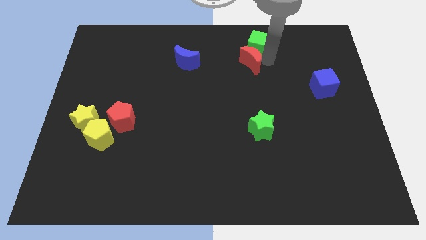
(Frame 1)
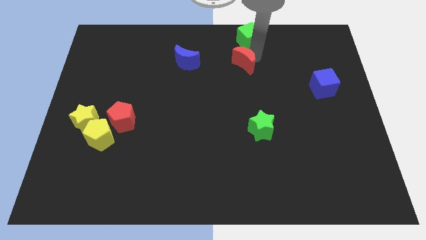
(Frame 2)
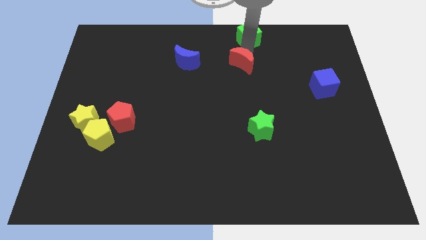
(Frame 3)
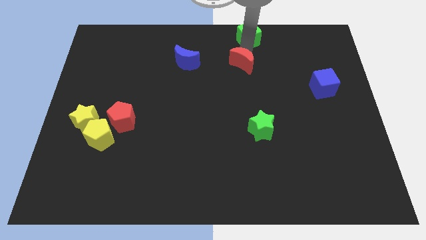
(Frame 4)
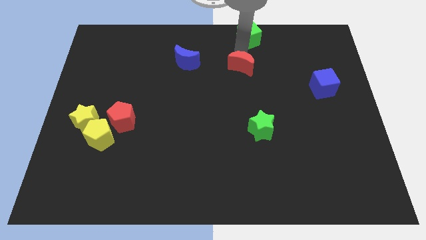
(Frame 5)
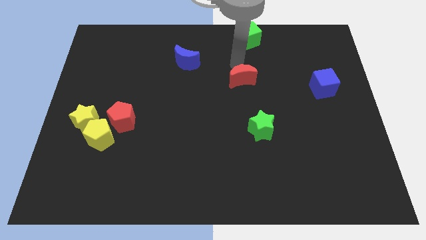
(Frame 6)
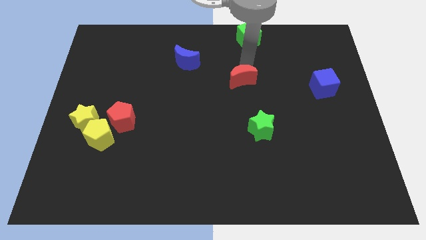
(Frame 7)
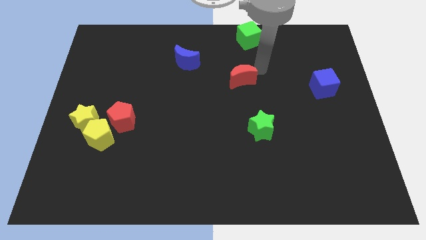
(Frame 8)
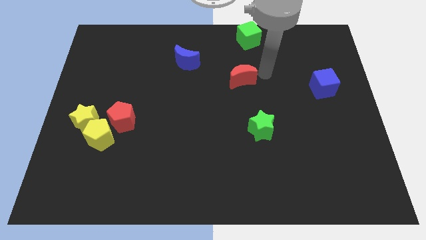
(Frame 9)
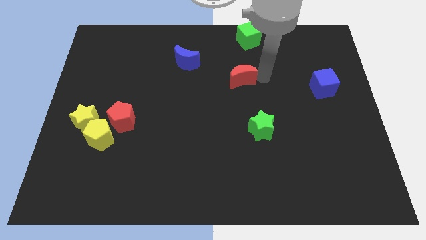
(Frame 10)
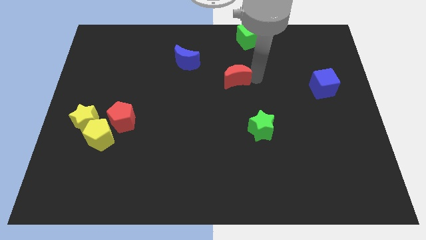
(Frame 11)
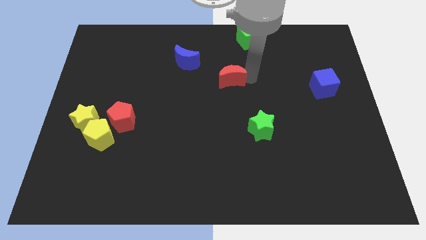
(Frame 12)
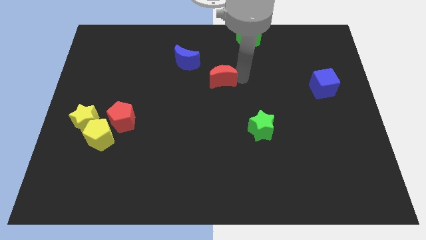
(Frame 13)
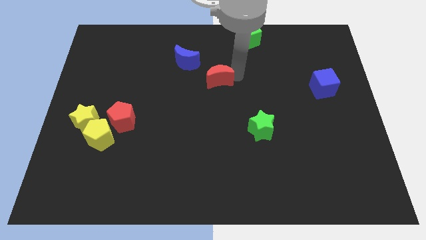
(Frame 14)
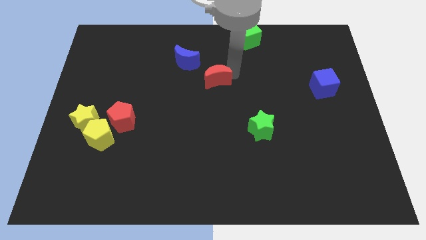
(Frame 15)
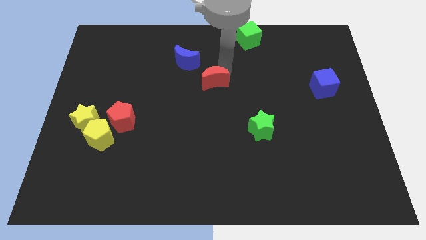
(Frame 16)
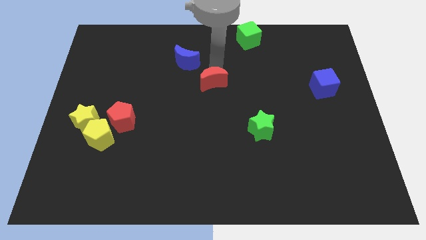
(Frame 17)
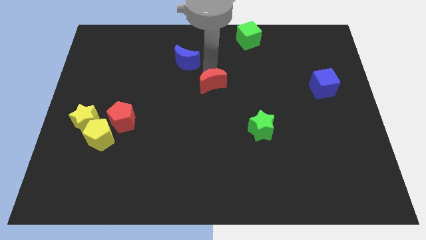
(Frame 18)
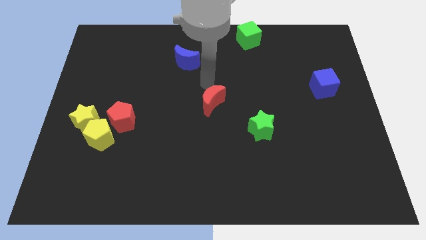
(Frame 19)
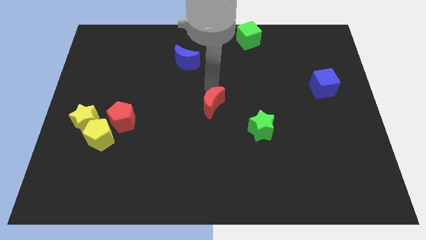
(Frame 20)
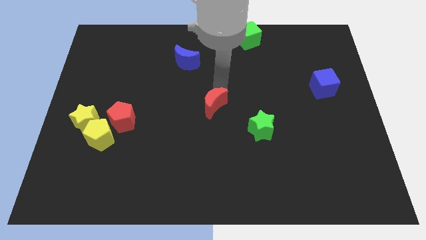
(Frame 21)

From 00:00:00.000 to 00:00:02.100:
push the red moon away from the green cube

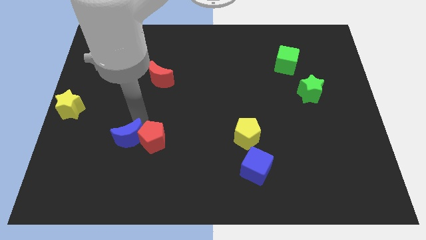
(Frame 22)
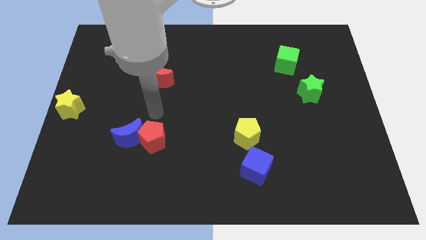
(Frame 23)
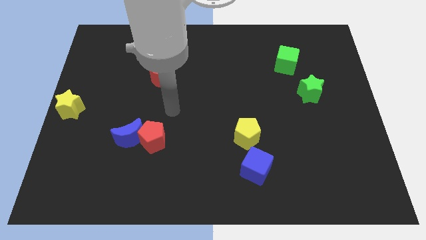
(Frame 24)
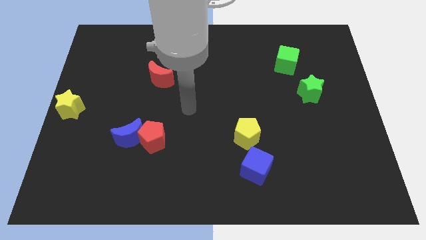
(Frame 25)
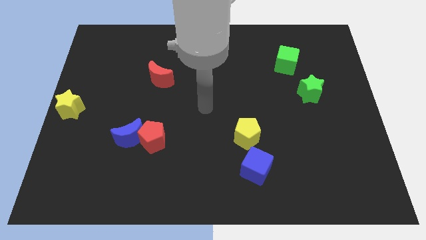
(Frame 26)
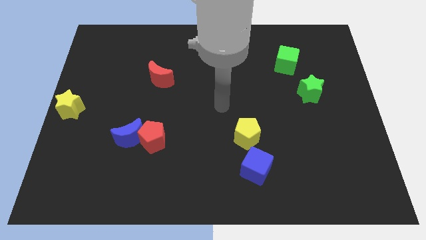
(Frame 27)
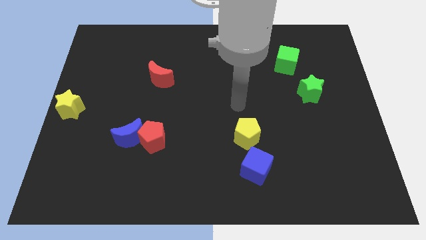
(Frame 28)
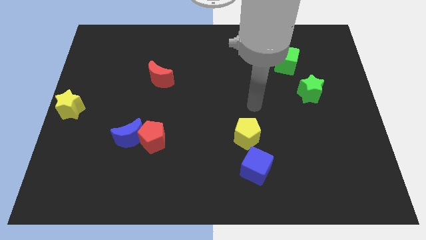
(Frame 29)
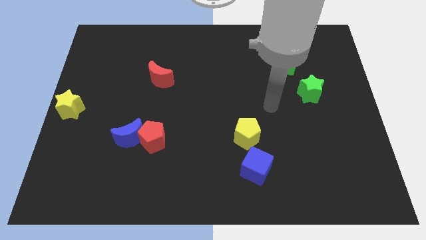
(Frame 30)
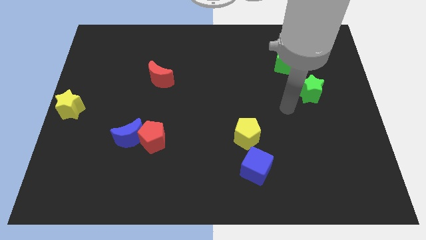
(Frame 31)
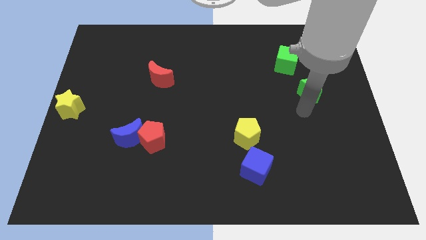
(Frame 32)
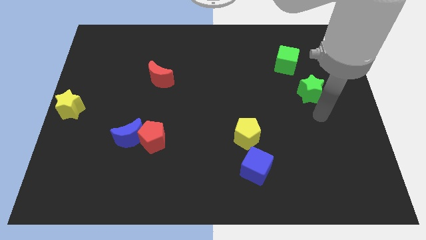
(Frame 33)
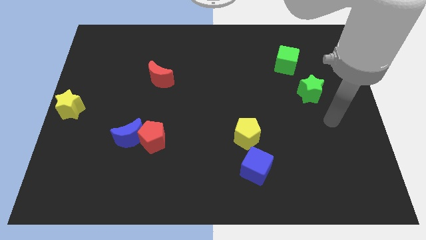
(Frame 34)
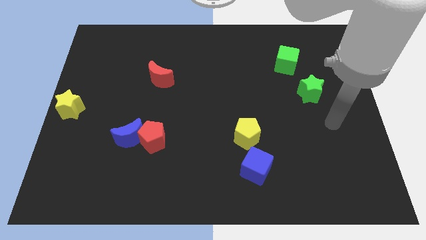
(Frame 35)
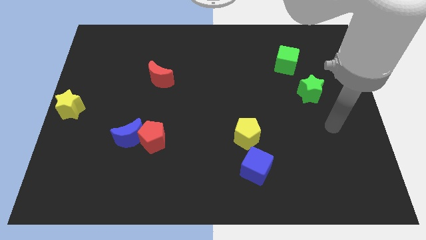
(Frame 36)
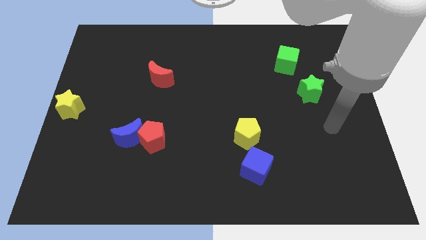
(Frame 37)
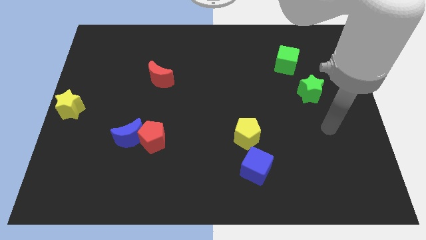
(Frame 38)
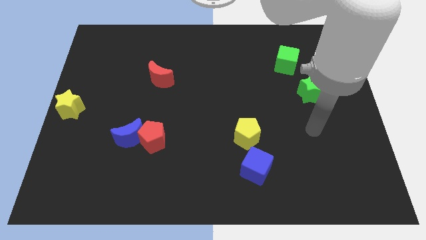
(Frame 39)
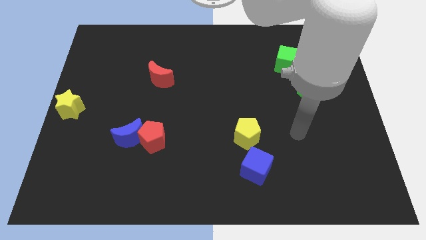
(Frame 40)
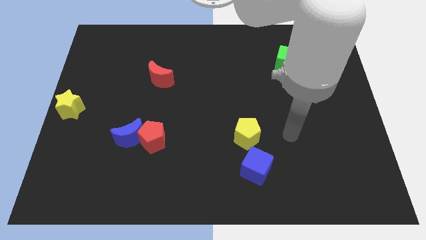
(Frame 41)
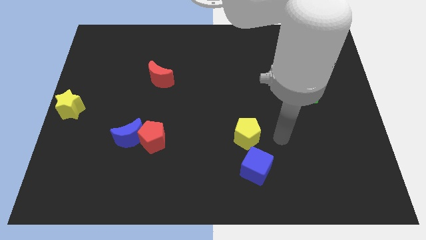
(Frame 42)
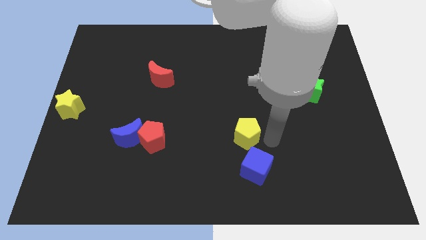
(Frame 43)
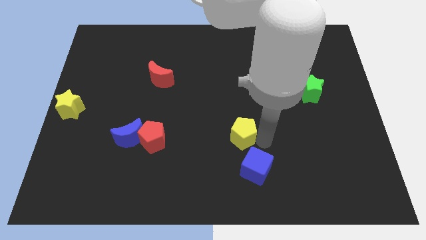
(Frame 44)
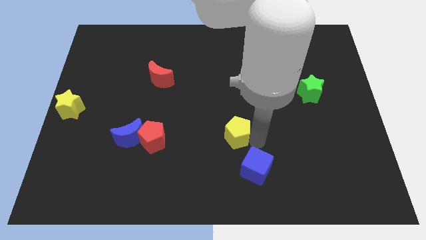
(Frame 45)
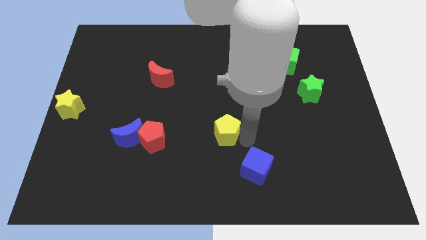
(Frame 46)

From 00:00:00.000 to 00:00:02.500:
push the yellow pentagon slightly to the left

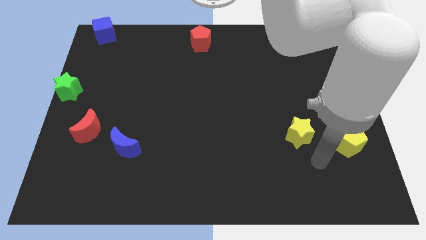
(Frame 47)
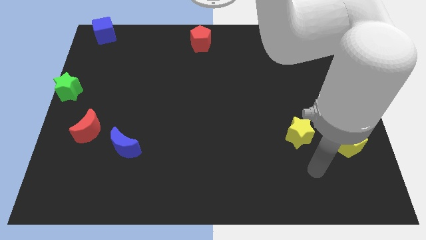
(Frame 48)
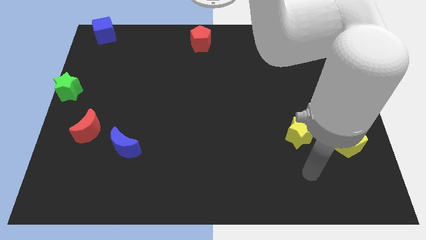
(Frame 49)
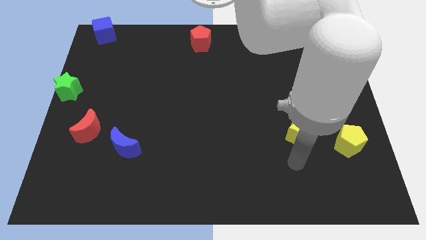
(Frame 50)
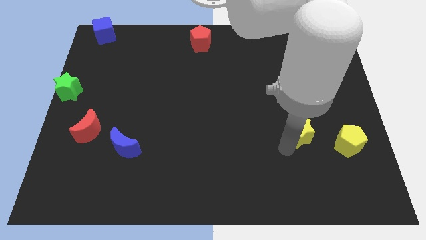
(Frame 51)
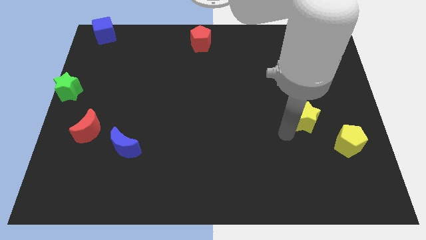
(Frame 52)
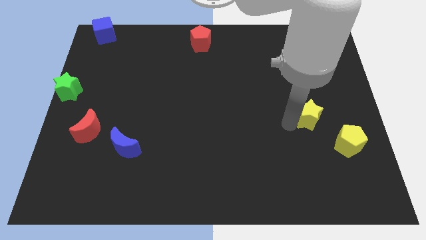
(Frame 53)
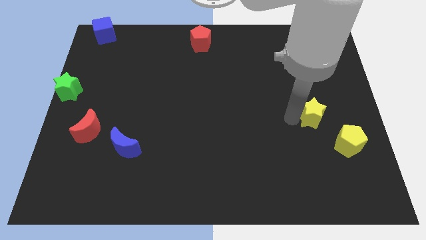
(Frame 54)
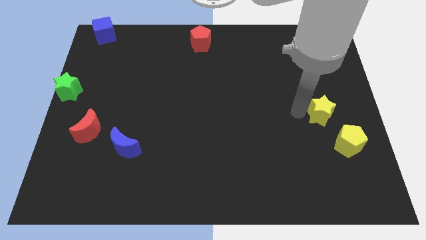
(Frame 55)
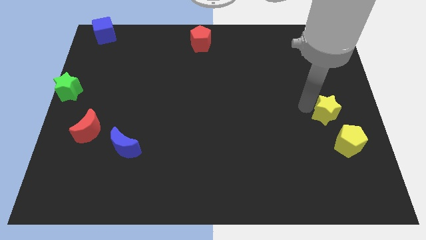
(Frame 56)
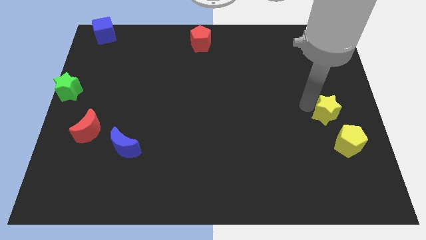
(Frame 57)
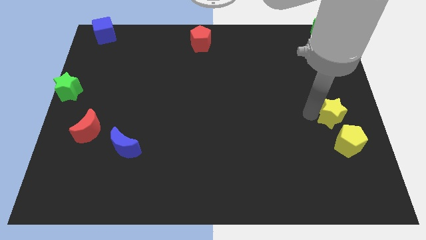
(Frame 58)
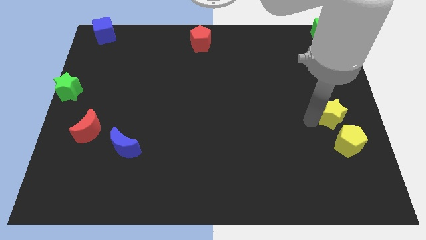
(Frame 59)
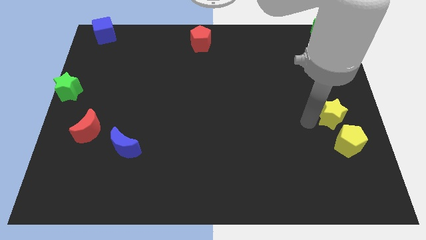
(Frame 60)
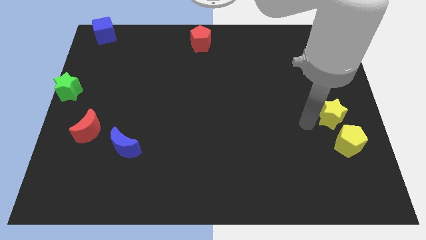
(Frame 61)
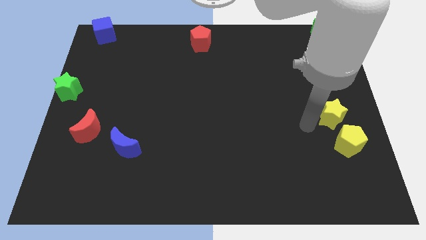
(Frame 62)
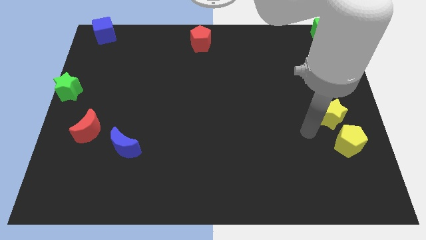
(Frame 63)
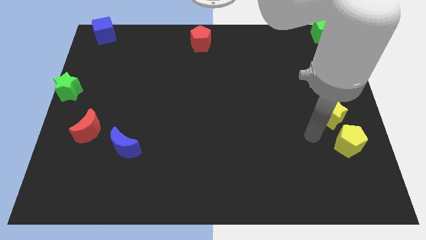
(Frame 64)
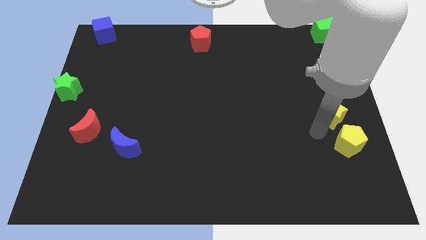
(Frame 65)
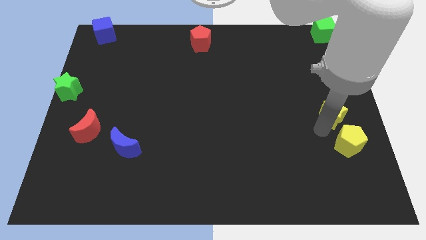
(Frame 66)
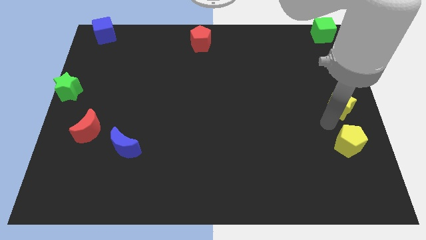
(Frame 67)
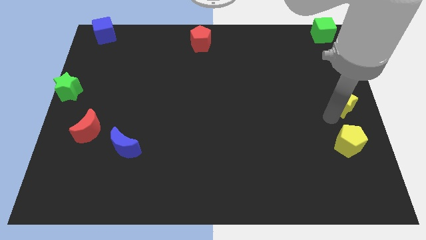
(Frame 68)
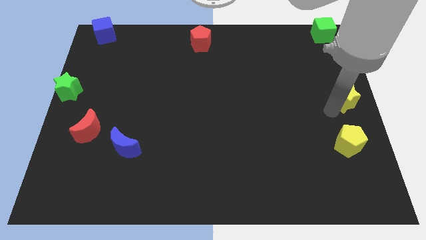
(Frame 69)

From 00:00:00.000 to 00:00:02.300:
move the yellow star above the yellow pentagon

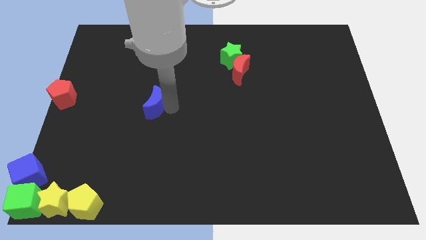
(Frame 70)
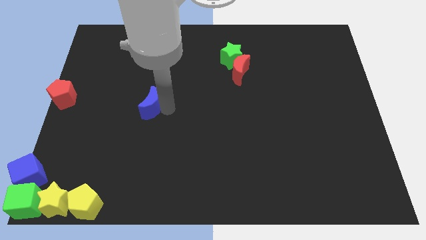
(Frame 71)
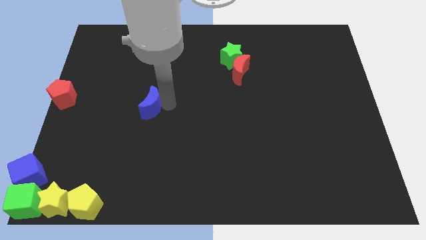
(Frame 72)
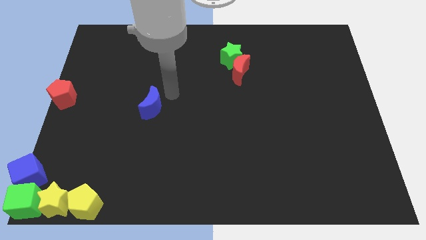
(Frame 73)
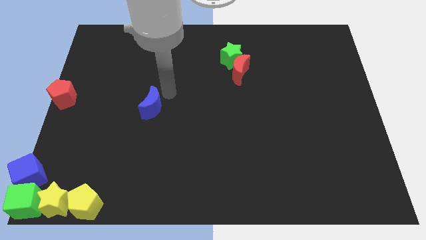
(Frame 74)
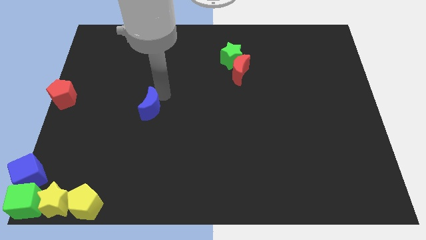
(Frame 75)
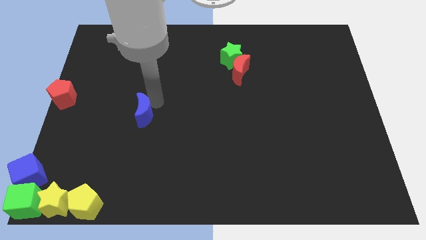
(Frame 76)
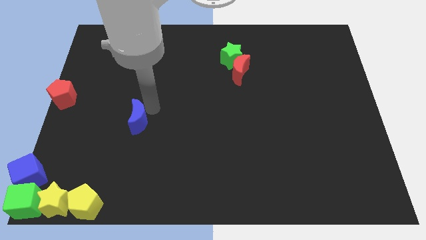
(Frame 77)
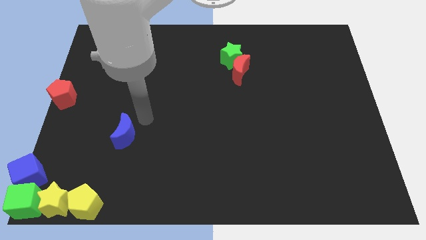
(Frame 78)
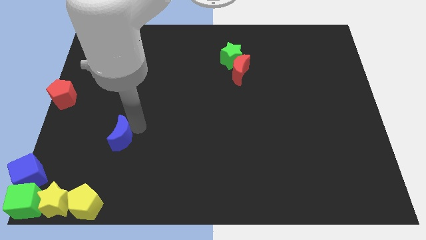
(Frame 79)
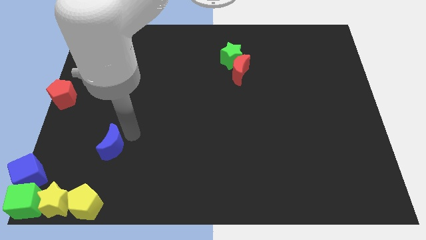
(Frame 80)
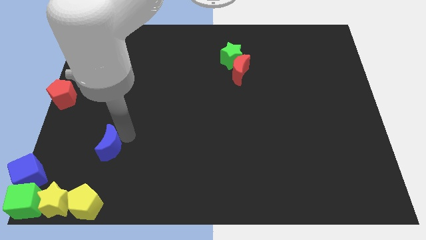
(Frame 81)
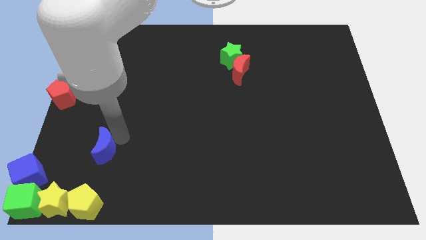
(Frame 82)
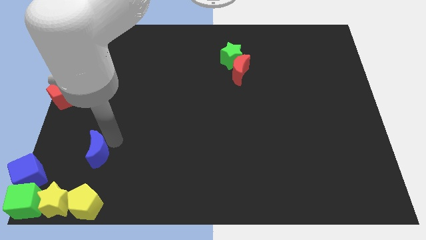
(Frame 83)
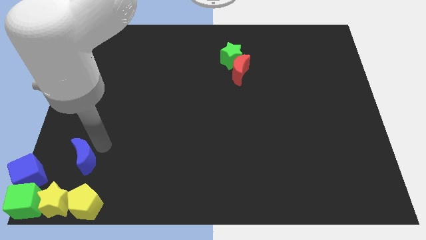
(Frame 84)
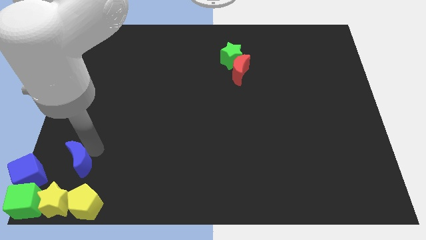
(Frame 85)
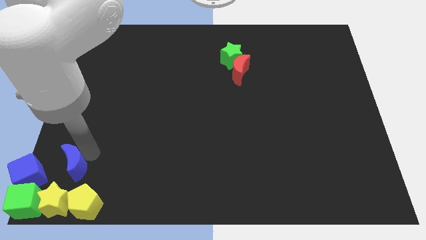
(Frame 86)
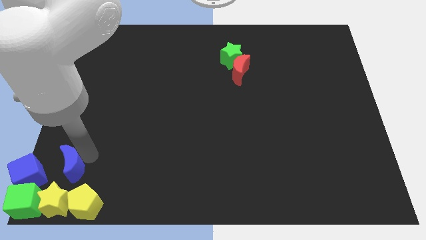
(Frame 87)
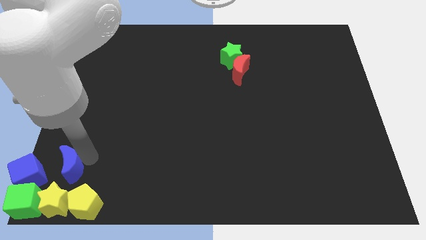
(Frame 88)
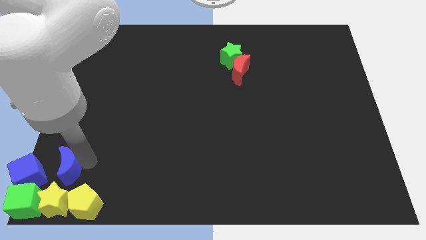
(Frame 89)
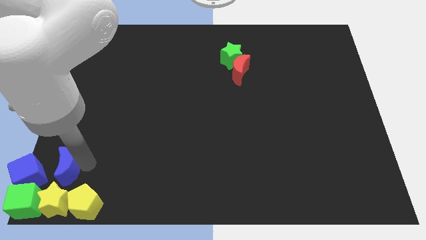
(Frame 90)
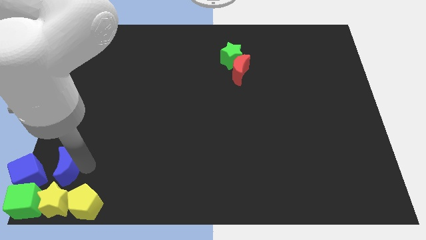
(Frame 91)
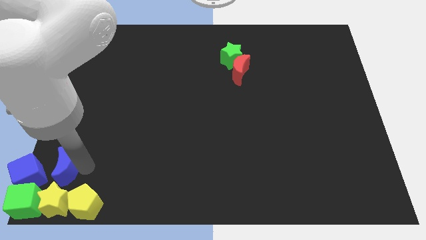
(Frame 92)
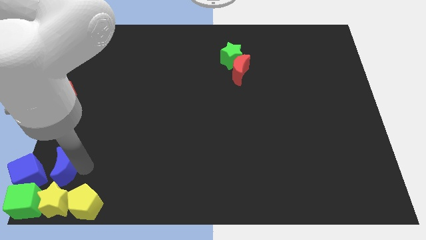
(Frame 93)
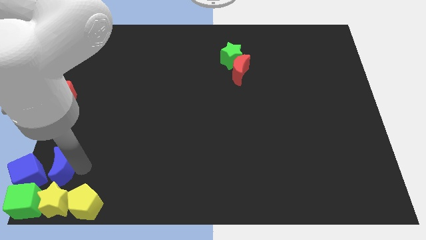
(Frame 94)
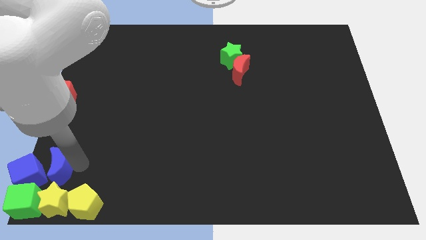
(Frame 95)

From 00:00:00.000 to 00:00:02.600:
move the blue crescent to the top of the yellow star
